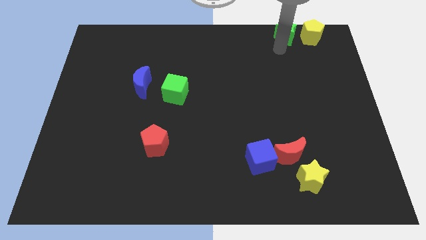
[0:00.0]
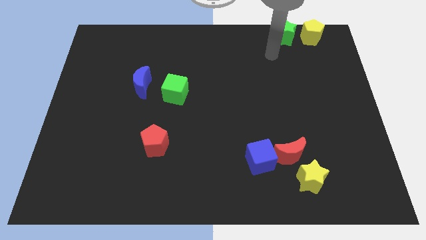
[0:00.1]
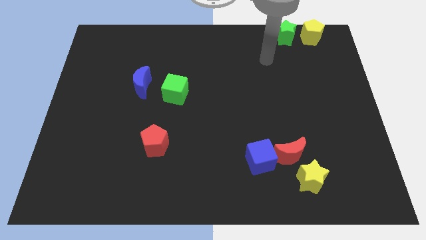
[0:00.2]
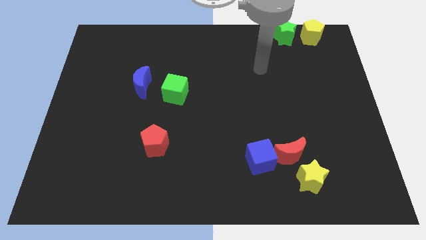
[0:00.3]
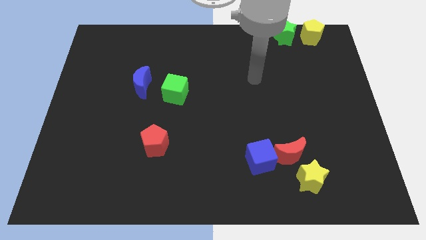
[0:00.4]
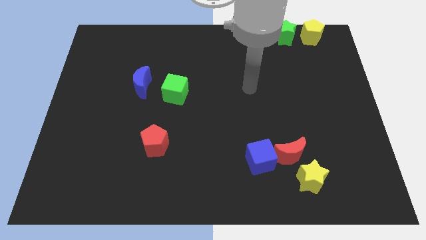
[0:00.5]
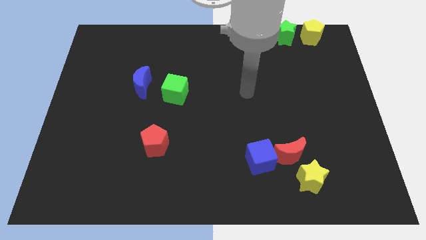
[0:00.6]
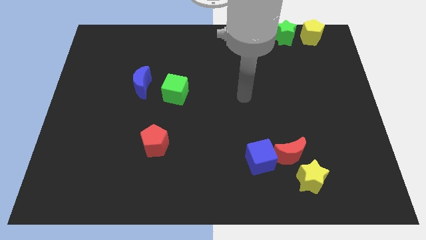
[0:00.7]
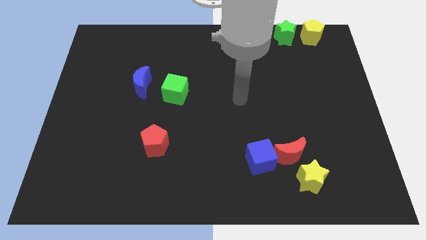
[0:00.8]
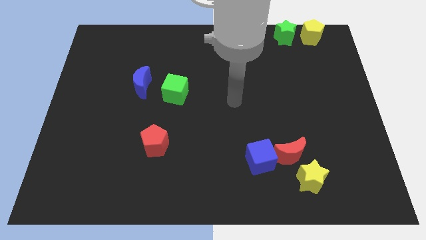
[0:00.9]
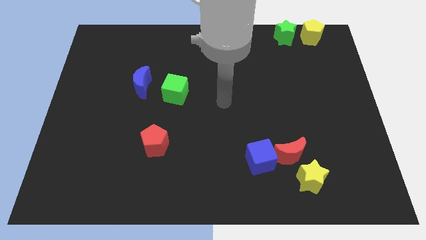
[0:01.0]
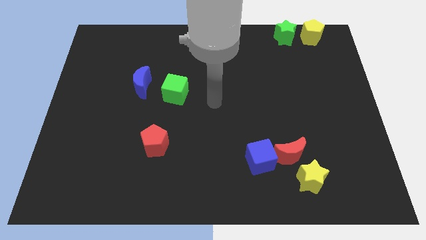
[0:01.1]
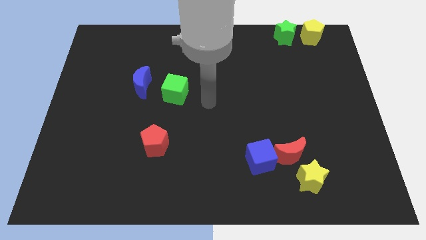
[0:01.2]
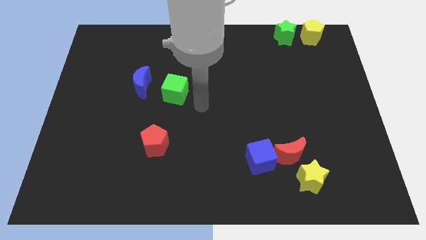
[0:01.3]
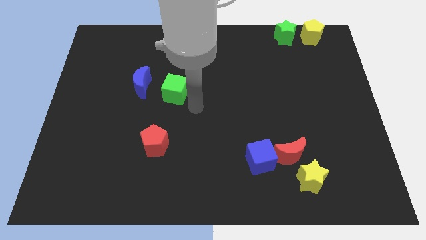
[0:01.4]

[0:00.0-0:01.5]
move your arm to the right of green cube

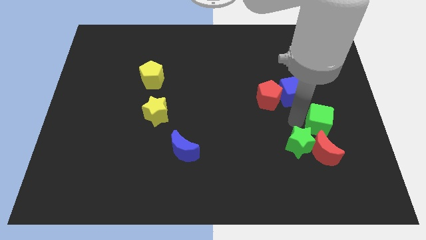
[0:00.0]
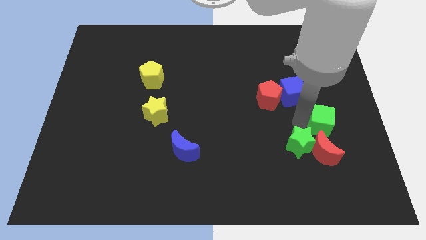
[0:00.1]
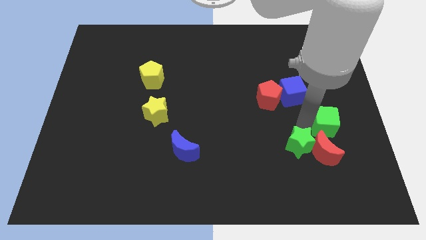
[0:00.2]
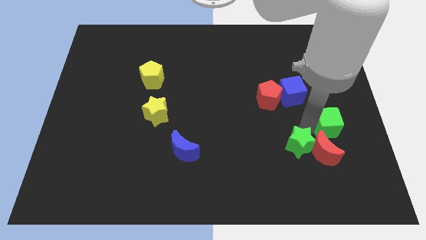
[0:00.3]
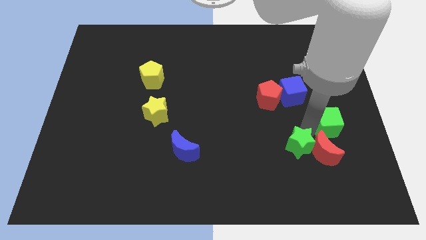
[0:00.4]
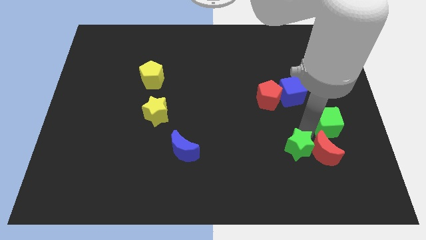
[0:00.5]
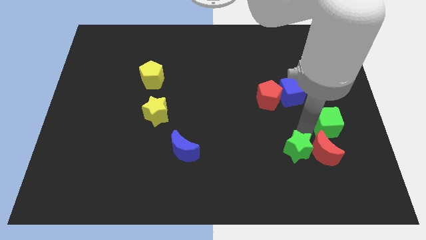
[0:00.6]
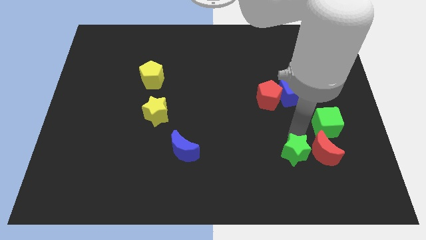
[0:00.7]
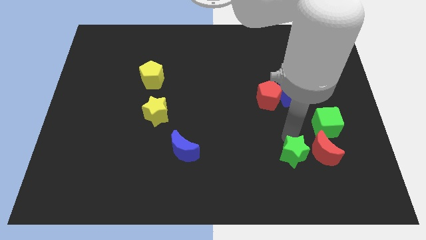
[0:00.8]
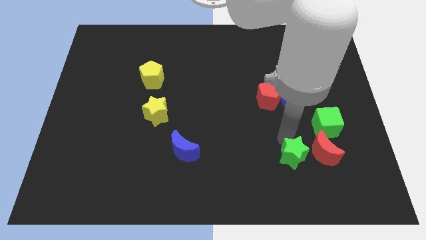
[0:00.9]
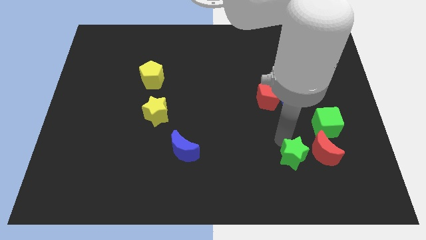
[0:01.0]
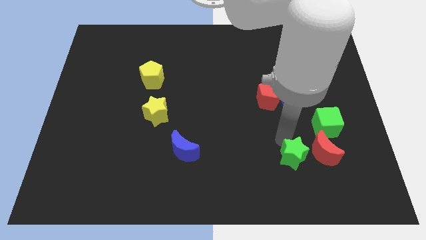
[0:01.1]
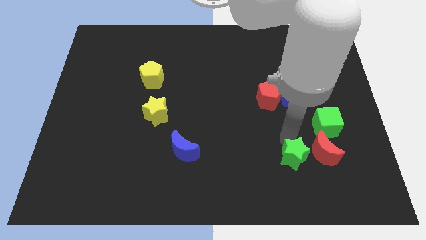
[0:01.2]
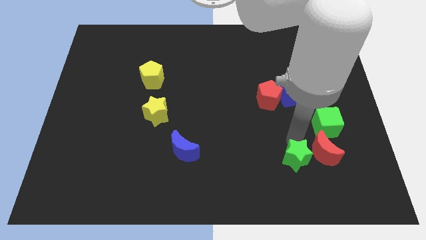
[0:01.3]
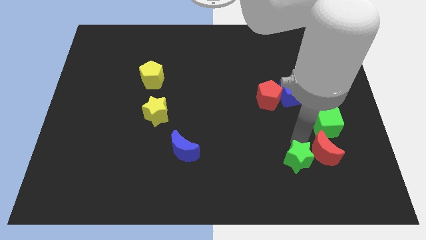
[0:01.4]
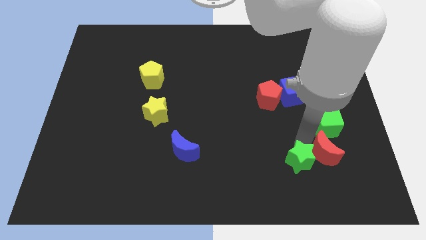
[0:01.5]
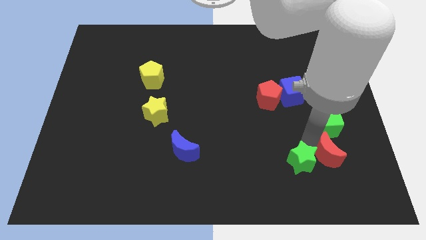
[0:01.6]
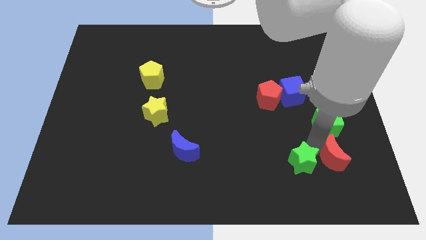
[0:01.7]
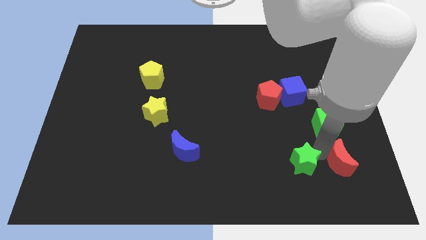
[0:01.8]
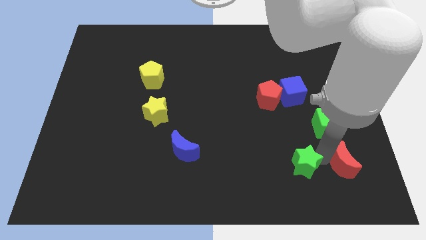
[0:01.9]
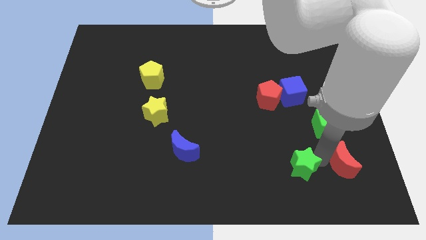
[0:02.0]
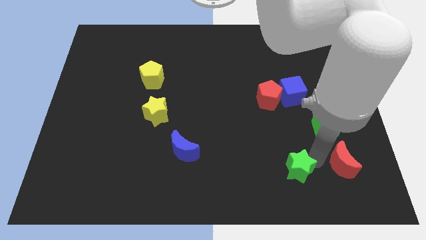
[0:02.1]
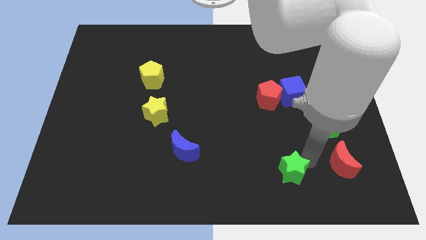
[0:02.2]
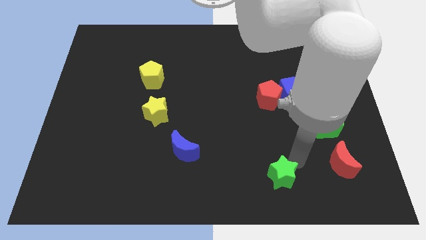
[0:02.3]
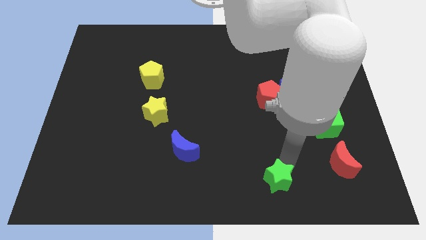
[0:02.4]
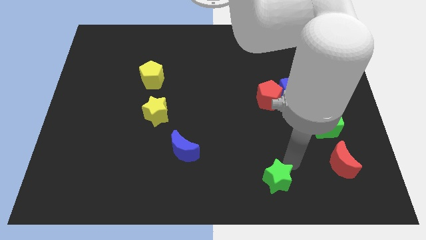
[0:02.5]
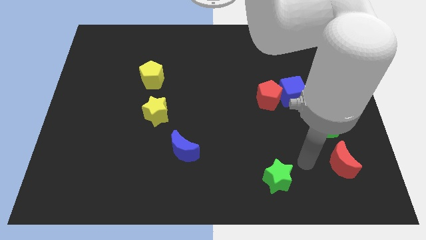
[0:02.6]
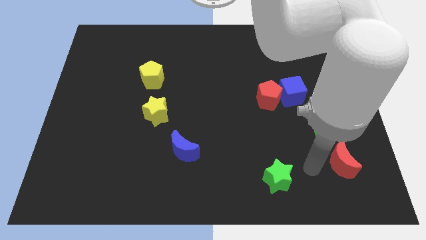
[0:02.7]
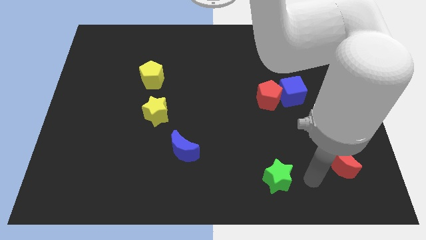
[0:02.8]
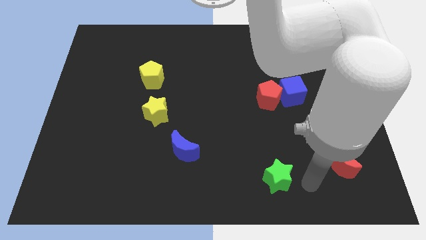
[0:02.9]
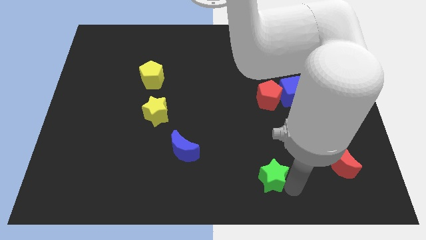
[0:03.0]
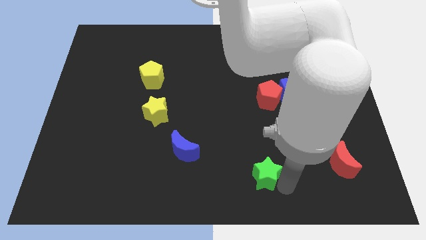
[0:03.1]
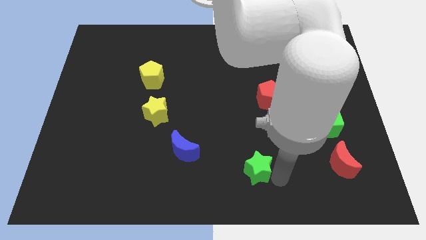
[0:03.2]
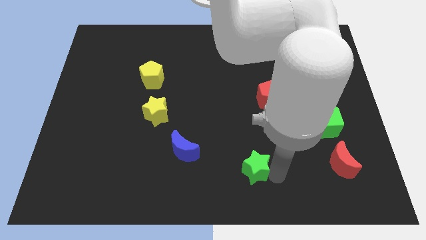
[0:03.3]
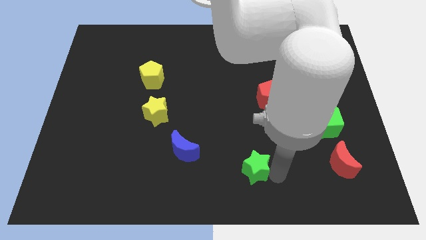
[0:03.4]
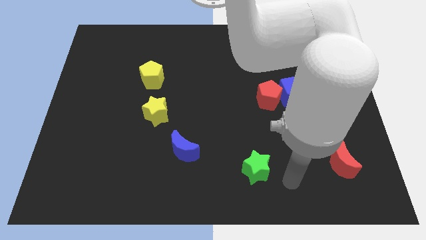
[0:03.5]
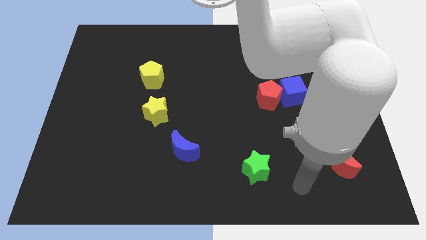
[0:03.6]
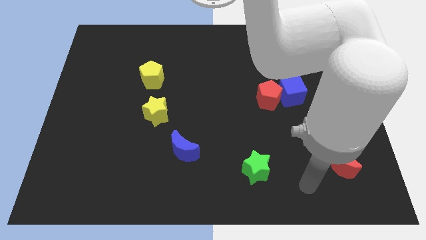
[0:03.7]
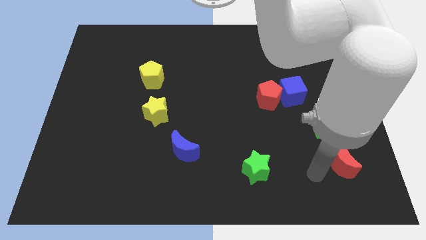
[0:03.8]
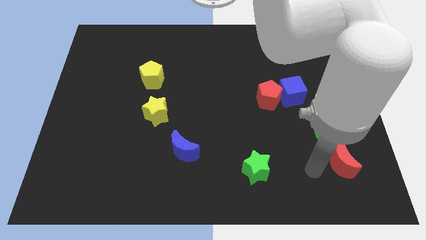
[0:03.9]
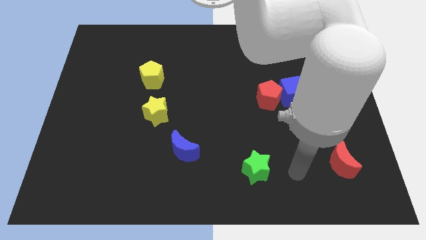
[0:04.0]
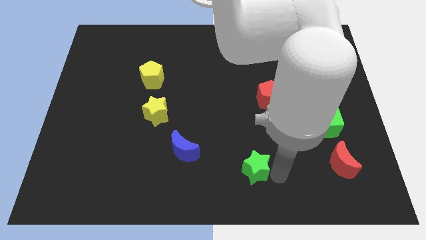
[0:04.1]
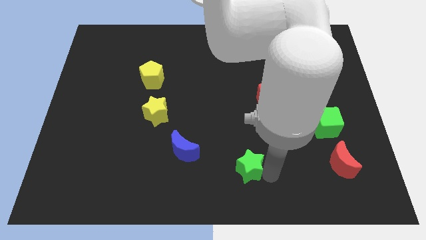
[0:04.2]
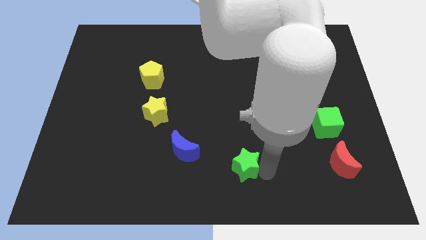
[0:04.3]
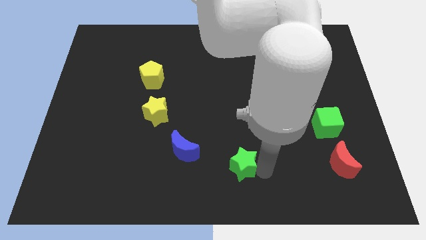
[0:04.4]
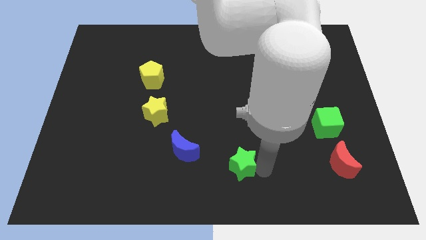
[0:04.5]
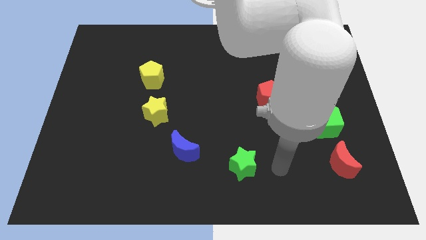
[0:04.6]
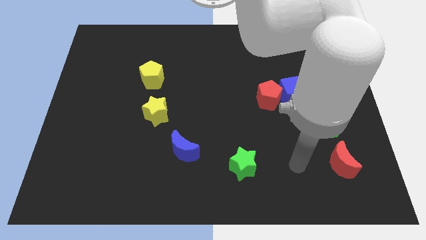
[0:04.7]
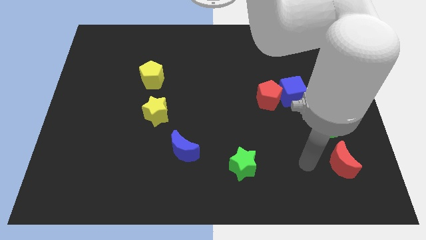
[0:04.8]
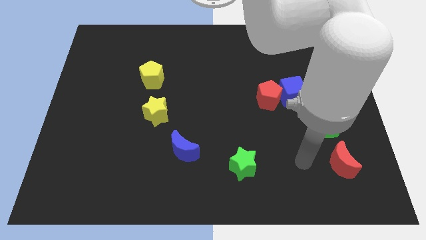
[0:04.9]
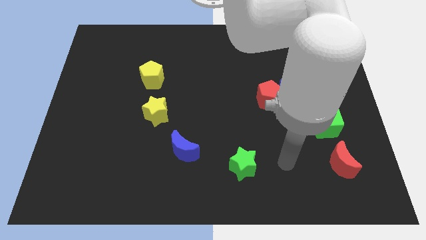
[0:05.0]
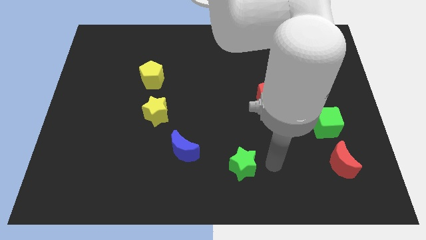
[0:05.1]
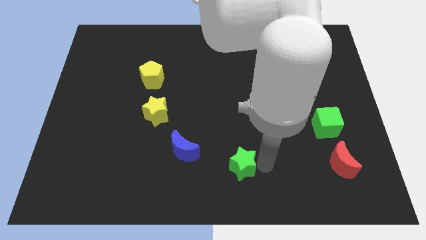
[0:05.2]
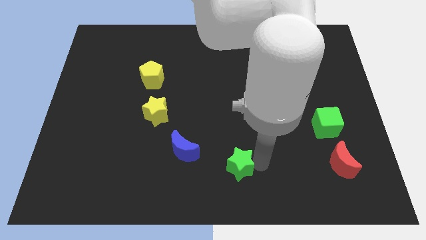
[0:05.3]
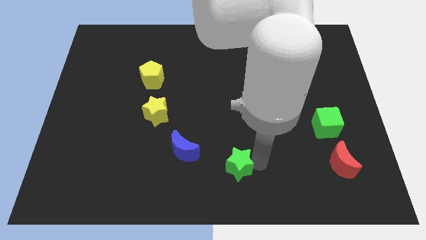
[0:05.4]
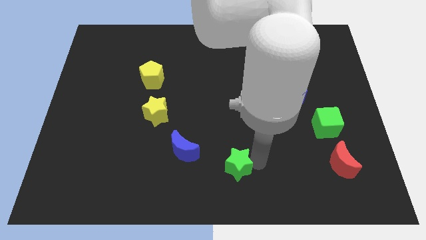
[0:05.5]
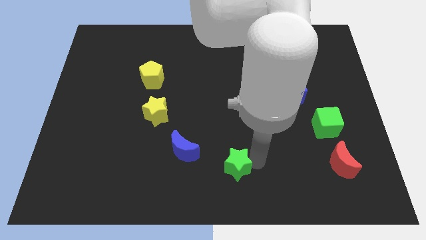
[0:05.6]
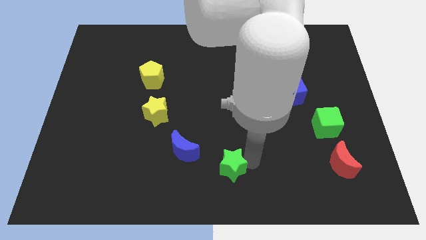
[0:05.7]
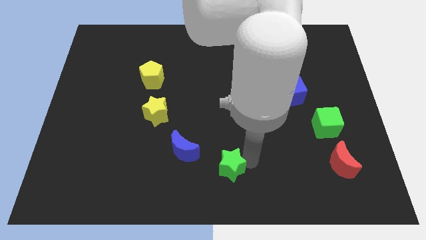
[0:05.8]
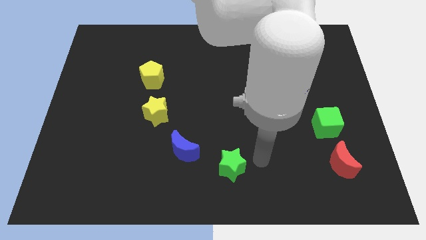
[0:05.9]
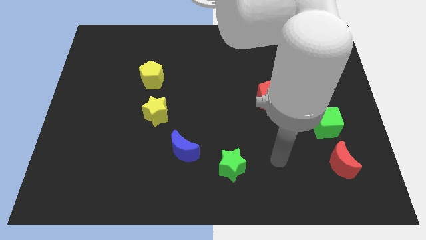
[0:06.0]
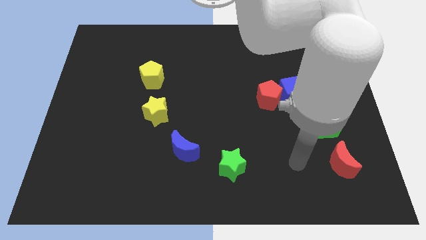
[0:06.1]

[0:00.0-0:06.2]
push the green star to the bottom right of the blue moon

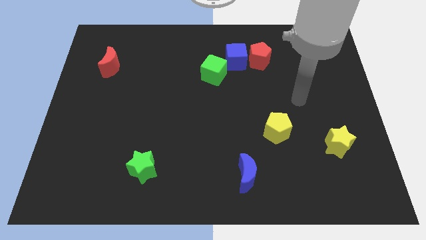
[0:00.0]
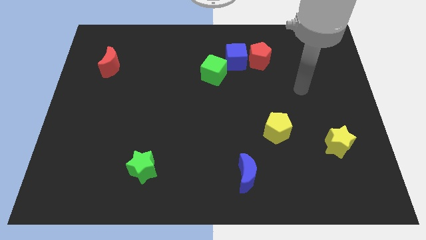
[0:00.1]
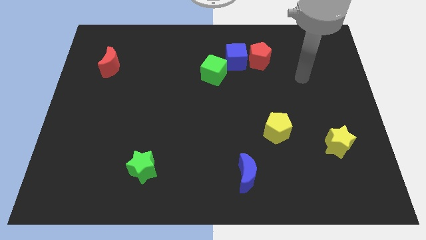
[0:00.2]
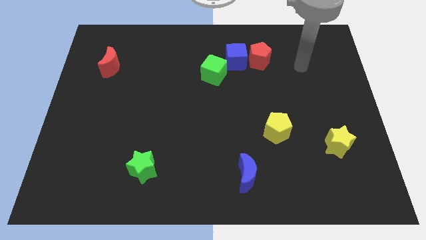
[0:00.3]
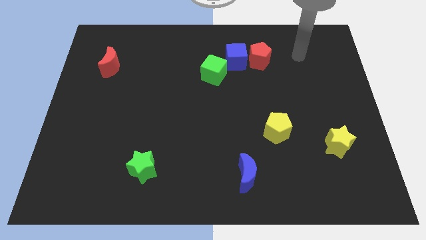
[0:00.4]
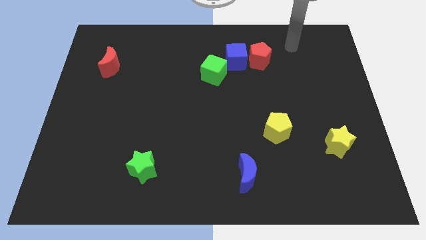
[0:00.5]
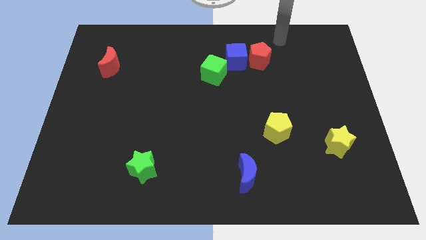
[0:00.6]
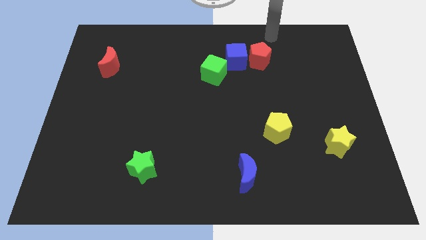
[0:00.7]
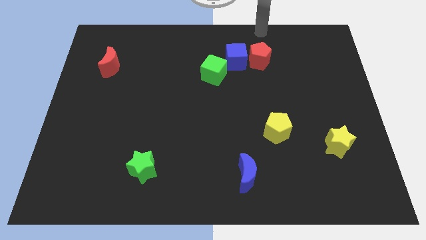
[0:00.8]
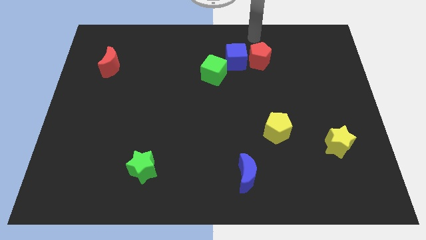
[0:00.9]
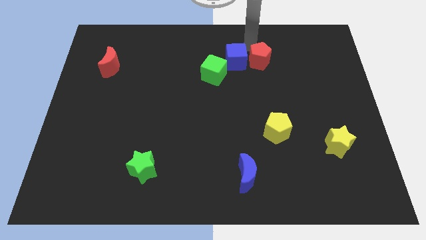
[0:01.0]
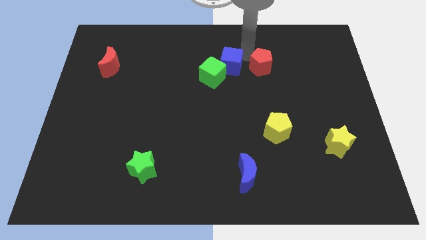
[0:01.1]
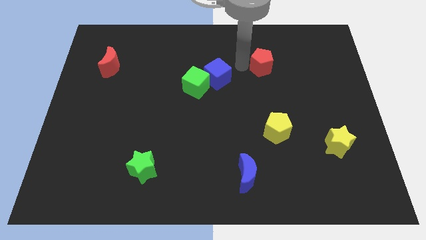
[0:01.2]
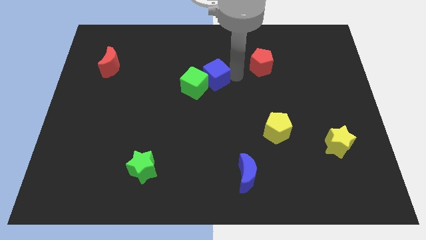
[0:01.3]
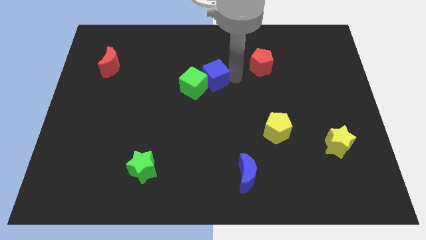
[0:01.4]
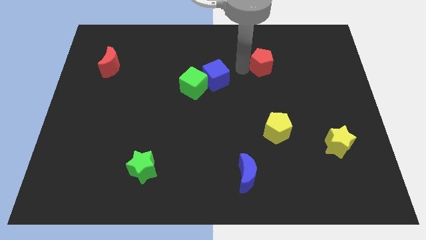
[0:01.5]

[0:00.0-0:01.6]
push green cube with blue cube
